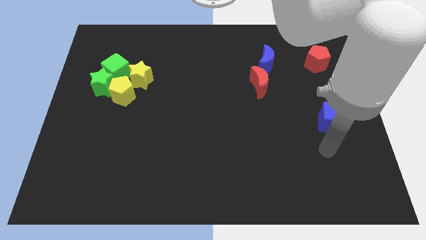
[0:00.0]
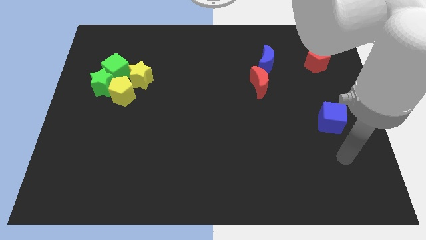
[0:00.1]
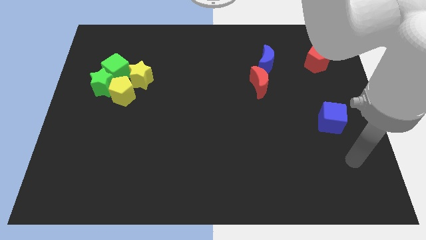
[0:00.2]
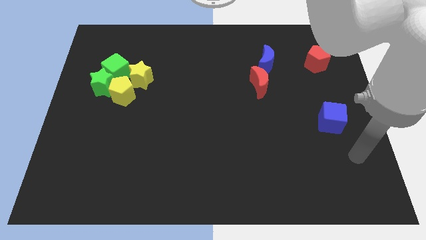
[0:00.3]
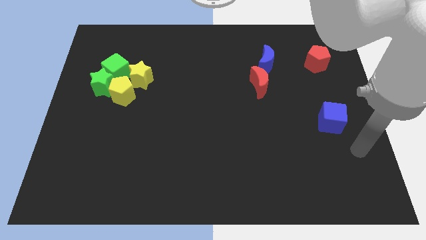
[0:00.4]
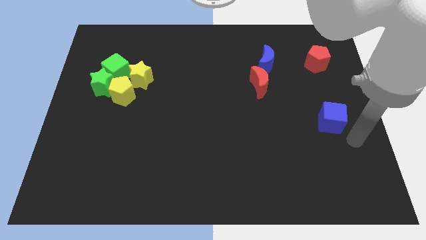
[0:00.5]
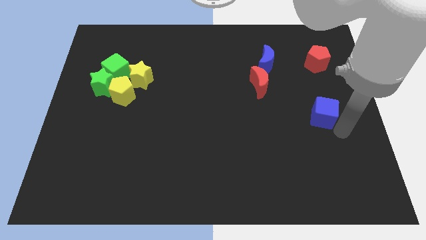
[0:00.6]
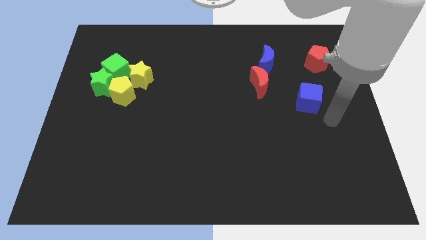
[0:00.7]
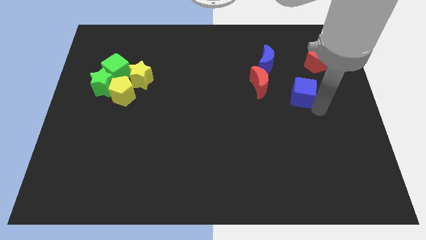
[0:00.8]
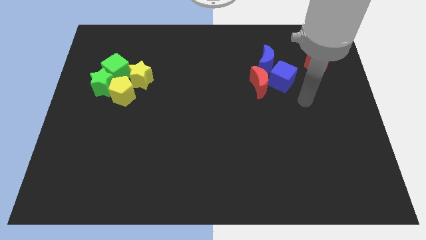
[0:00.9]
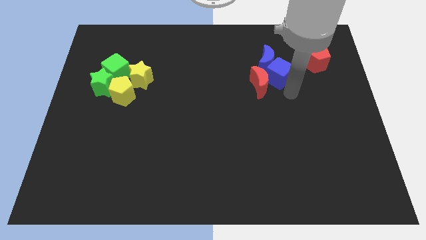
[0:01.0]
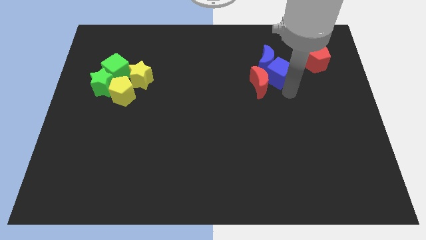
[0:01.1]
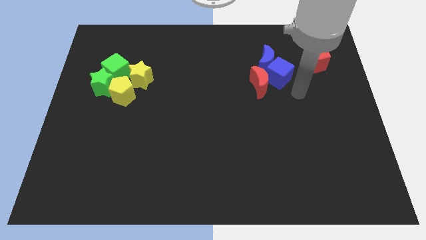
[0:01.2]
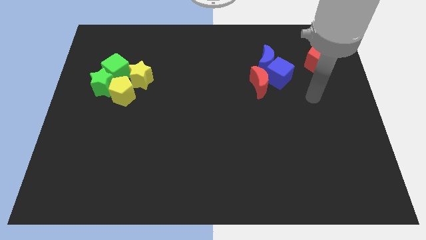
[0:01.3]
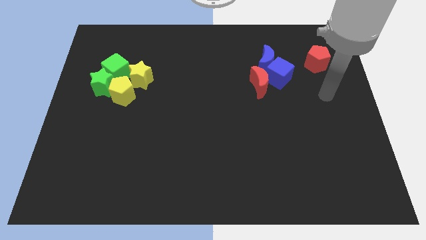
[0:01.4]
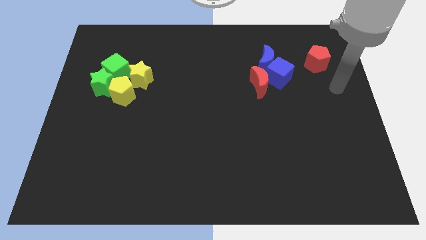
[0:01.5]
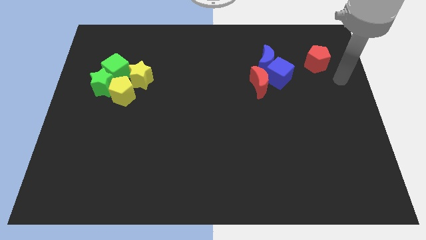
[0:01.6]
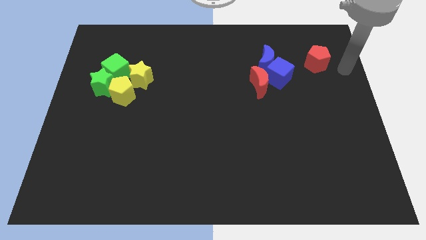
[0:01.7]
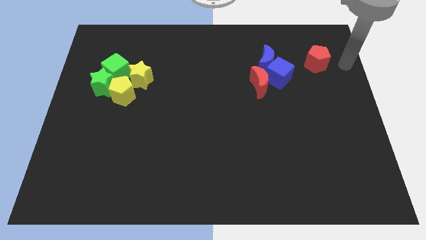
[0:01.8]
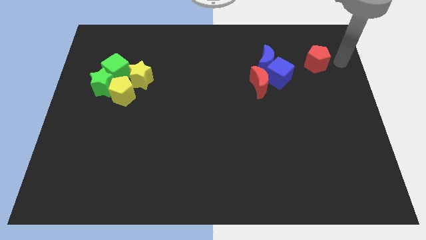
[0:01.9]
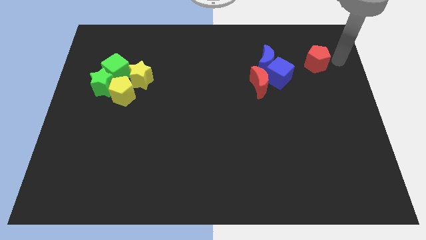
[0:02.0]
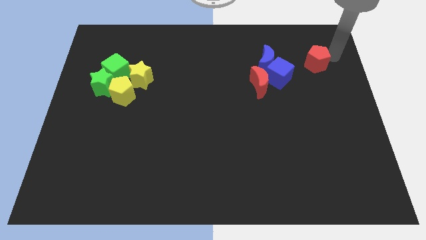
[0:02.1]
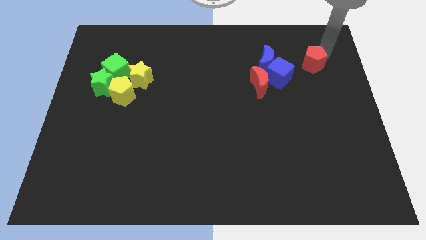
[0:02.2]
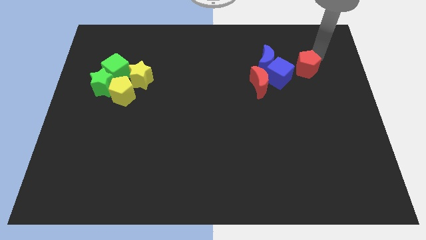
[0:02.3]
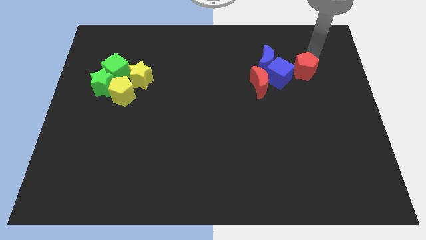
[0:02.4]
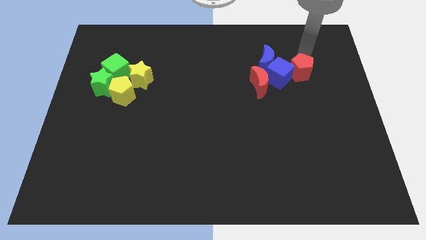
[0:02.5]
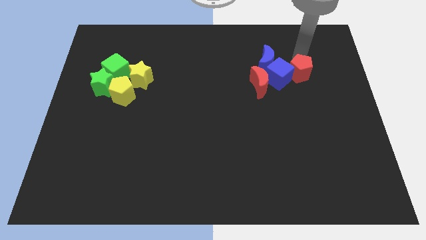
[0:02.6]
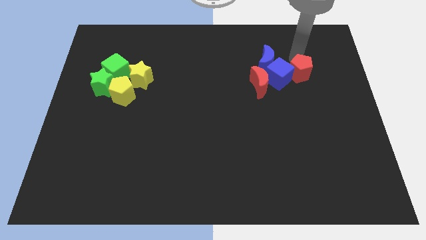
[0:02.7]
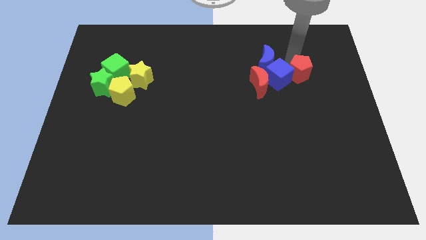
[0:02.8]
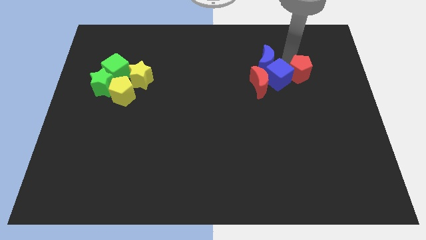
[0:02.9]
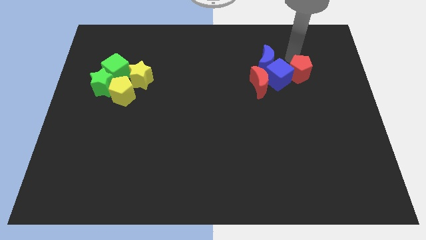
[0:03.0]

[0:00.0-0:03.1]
group up the blue and red blocks together at the top right side of the board

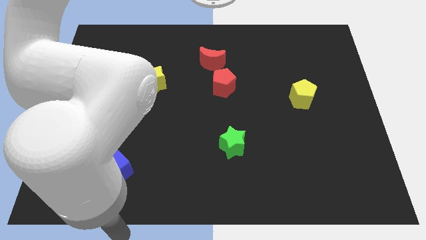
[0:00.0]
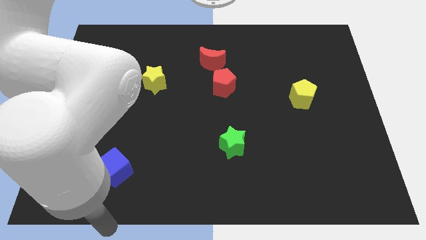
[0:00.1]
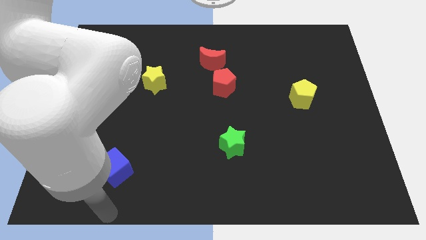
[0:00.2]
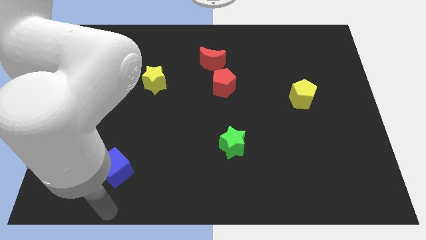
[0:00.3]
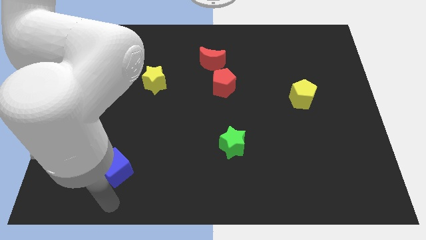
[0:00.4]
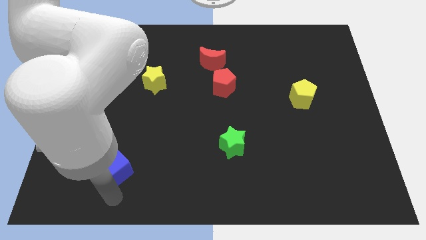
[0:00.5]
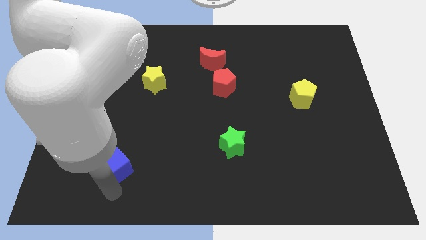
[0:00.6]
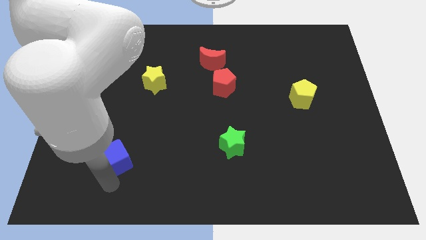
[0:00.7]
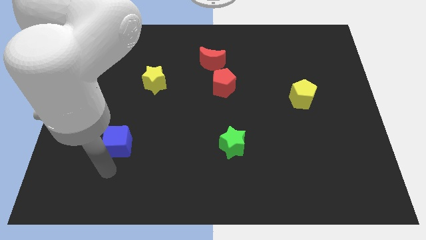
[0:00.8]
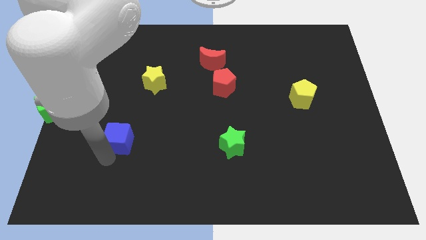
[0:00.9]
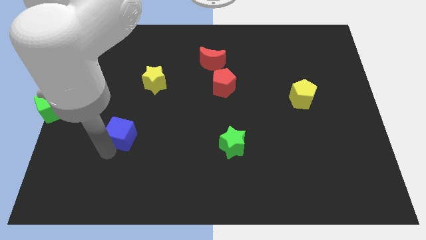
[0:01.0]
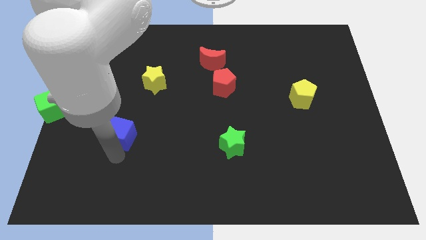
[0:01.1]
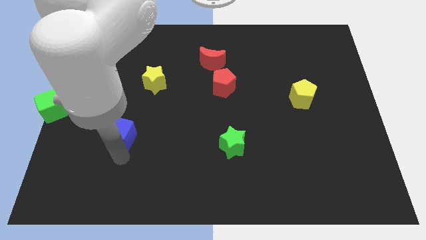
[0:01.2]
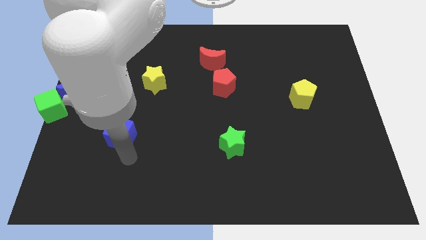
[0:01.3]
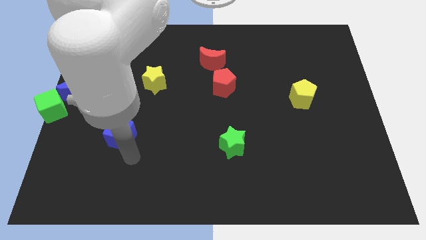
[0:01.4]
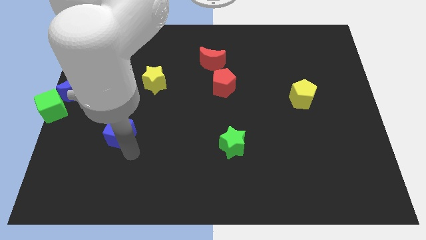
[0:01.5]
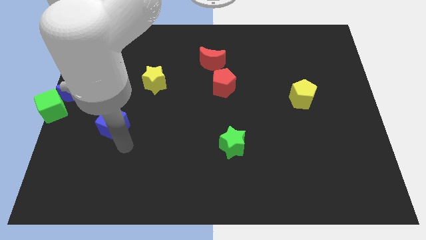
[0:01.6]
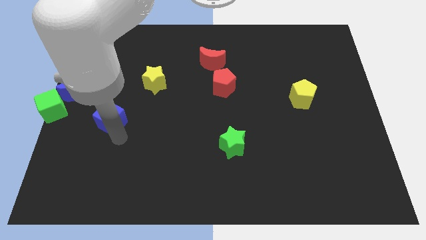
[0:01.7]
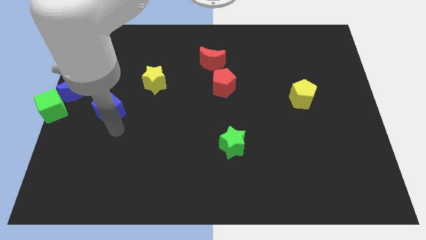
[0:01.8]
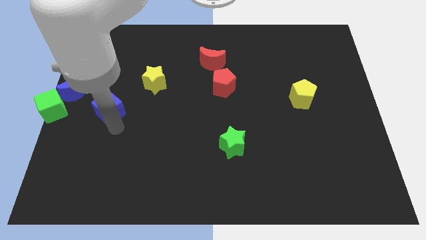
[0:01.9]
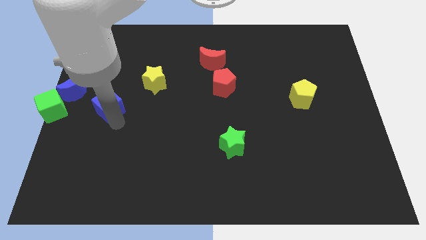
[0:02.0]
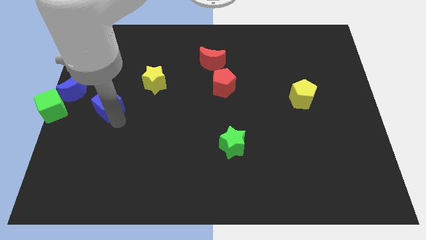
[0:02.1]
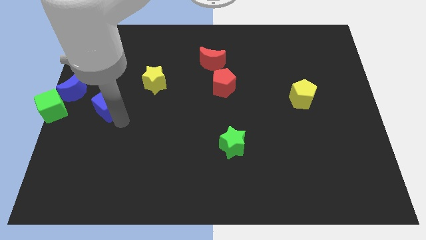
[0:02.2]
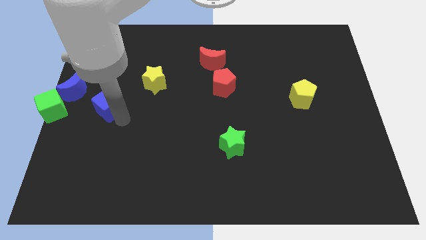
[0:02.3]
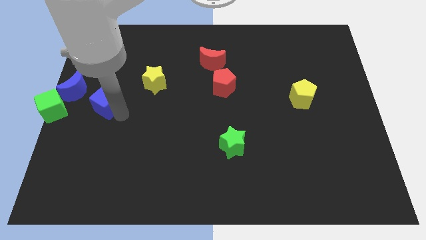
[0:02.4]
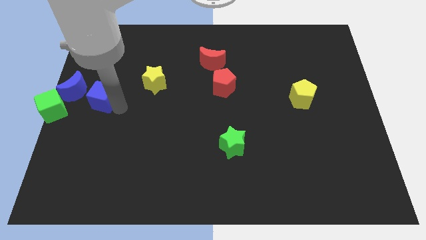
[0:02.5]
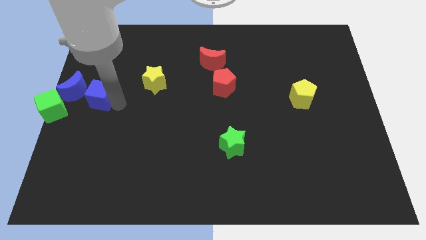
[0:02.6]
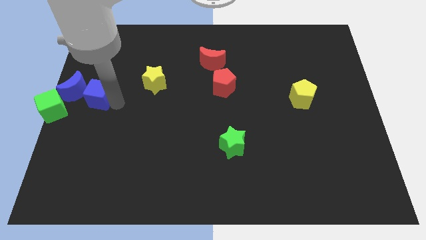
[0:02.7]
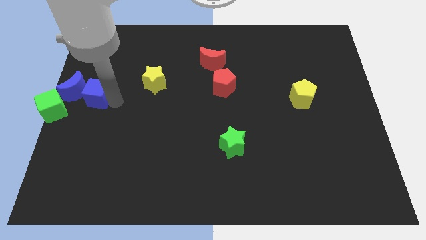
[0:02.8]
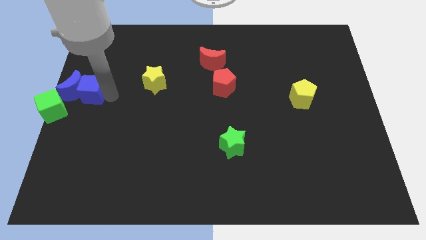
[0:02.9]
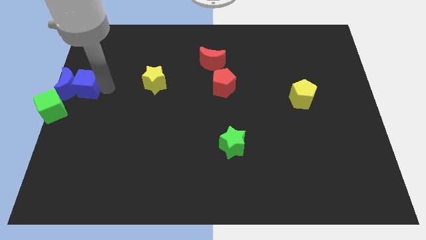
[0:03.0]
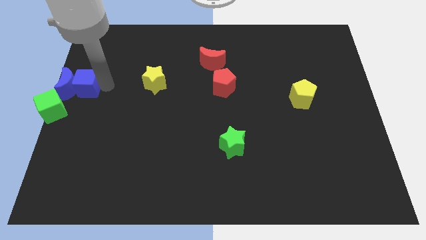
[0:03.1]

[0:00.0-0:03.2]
move the blue cube into the blue moon

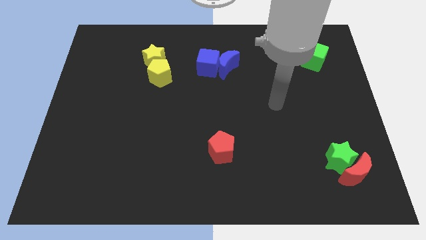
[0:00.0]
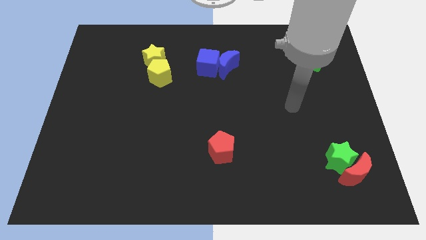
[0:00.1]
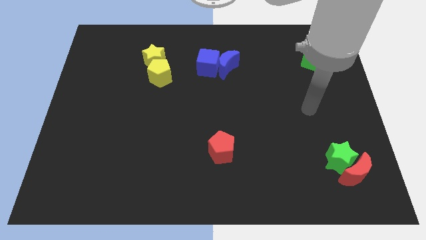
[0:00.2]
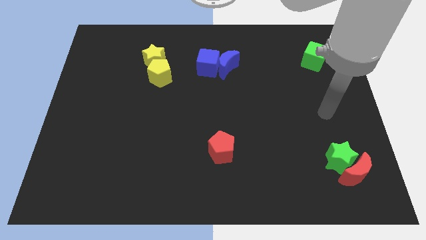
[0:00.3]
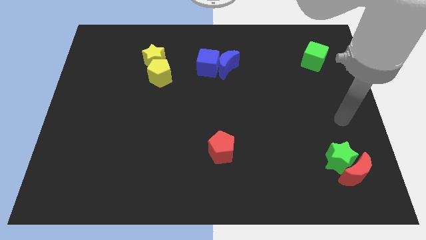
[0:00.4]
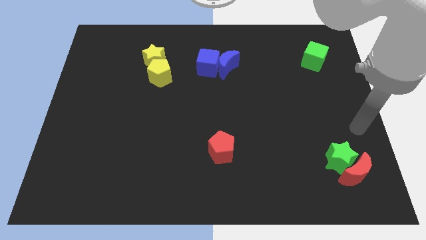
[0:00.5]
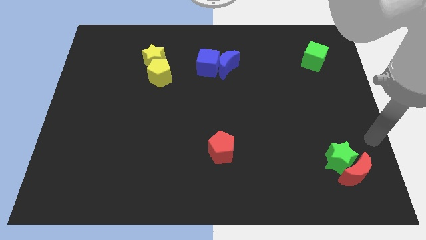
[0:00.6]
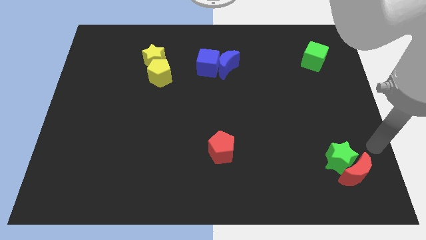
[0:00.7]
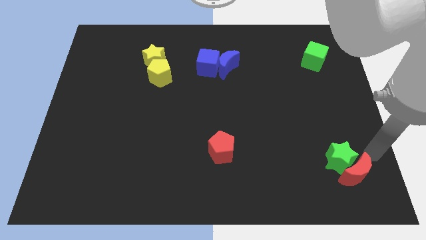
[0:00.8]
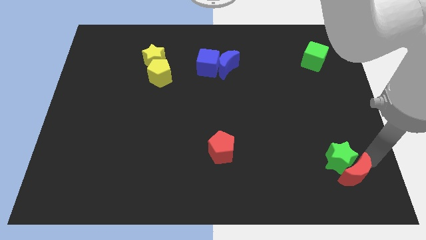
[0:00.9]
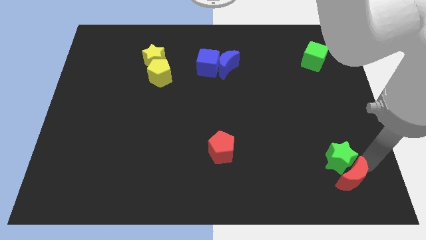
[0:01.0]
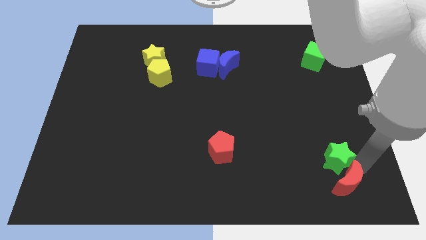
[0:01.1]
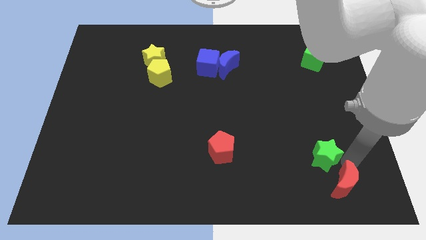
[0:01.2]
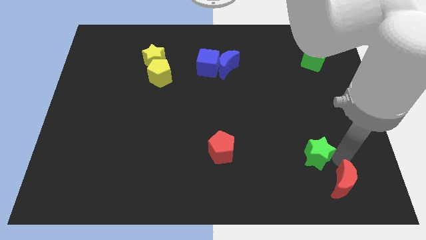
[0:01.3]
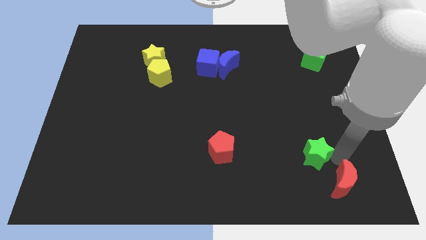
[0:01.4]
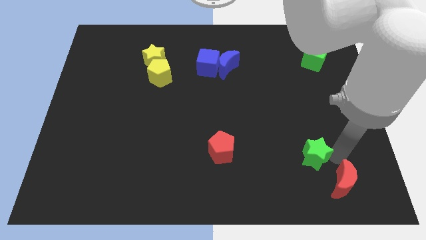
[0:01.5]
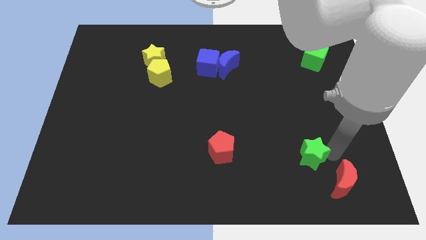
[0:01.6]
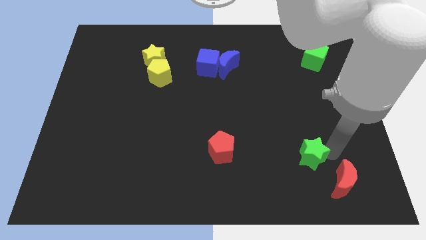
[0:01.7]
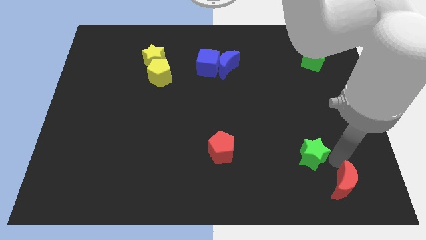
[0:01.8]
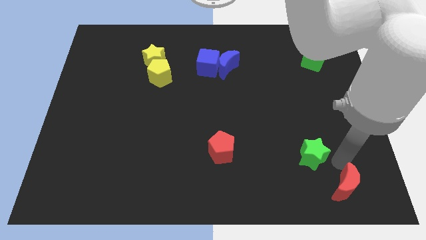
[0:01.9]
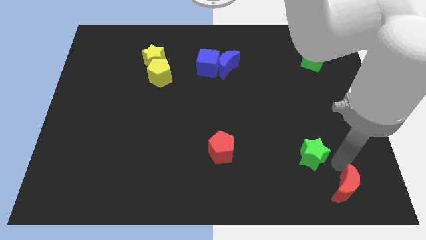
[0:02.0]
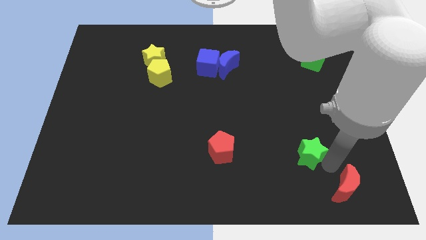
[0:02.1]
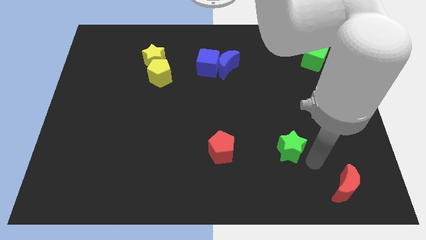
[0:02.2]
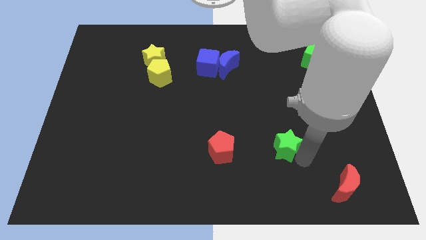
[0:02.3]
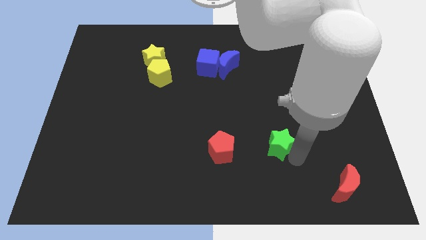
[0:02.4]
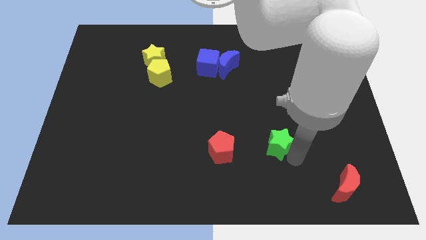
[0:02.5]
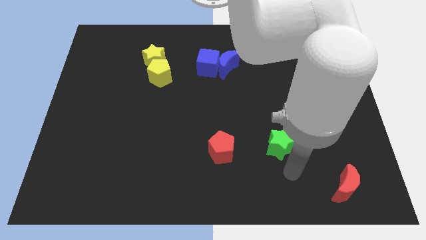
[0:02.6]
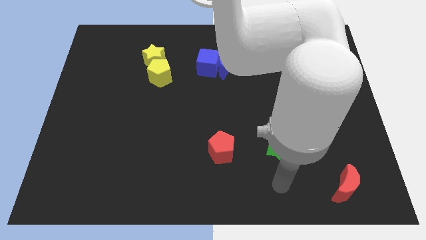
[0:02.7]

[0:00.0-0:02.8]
separate the red moon and green star
